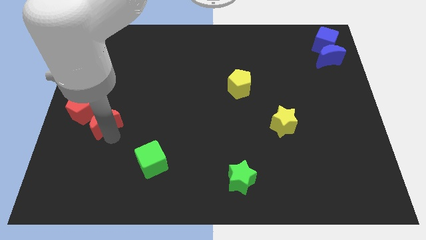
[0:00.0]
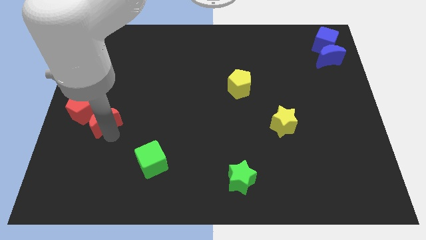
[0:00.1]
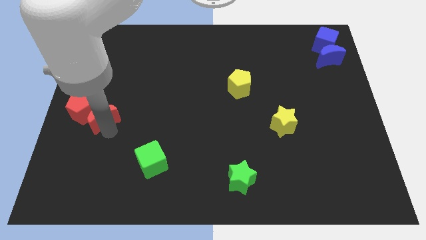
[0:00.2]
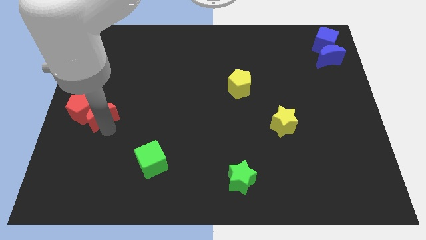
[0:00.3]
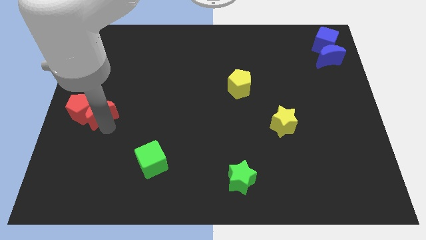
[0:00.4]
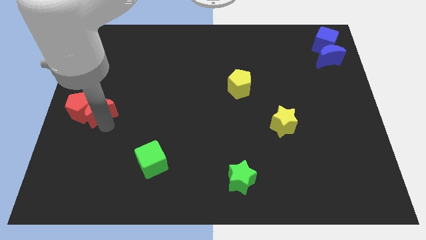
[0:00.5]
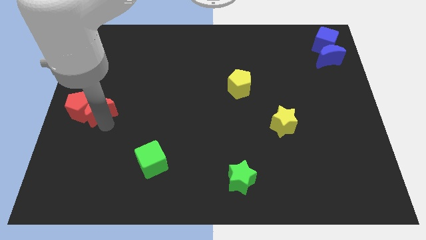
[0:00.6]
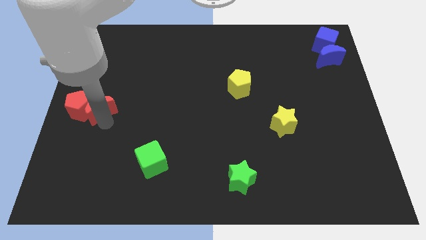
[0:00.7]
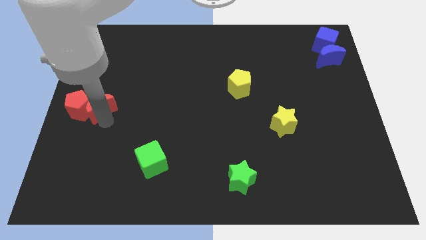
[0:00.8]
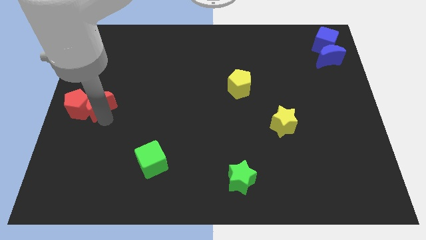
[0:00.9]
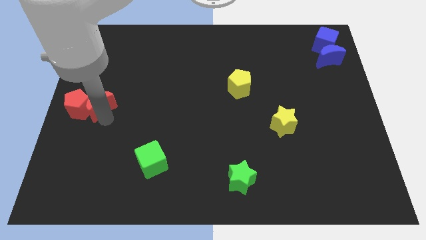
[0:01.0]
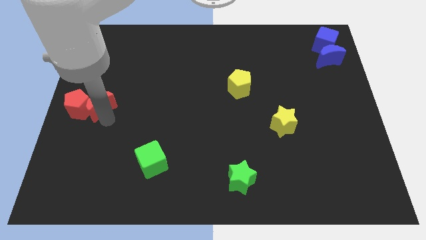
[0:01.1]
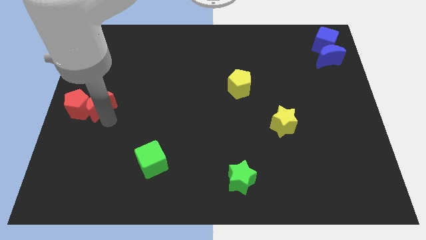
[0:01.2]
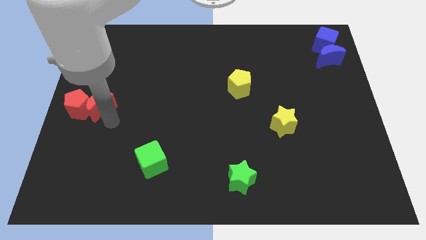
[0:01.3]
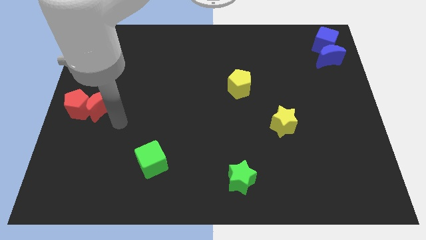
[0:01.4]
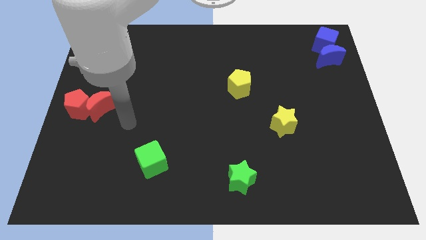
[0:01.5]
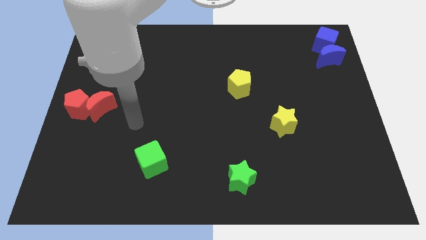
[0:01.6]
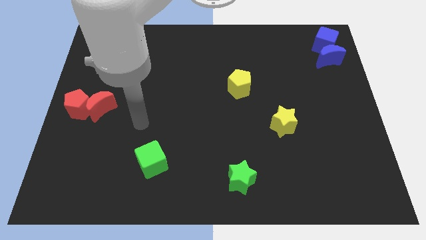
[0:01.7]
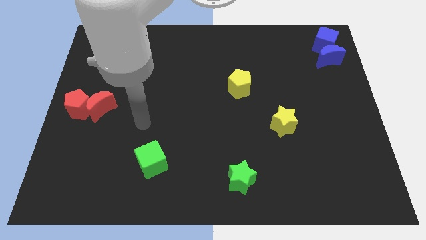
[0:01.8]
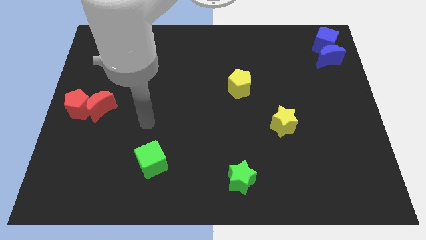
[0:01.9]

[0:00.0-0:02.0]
move the red moon into the red pentagon

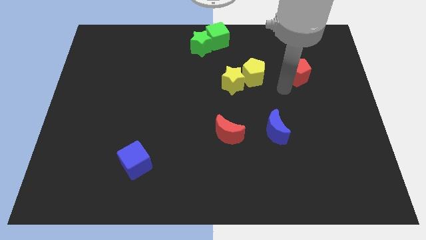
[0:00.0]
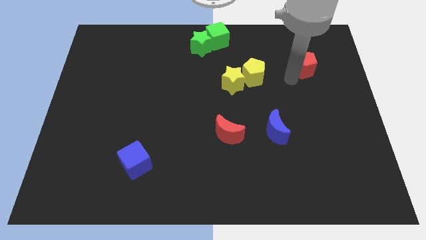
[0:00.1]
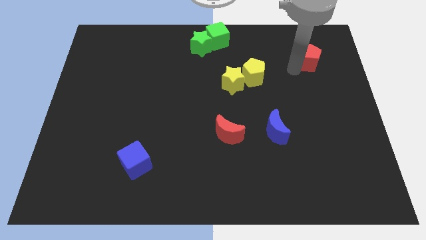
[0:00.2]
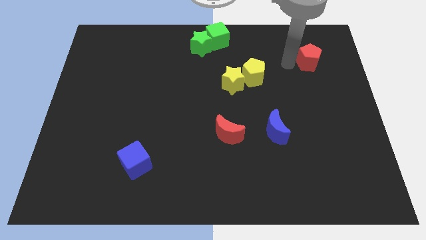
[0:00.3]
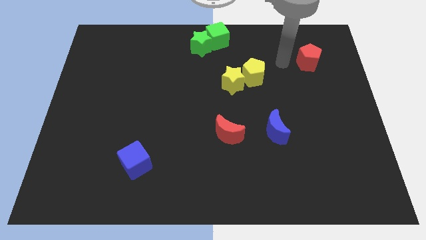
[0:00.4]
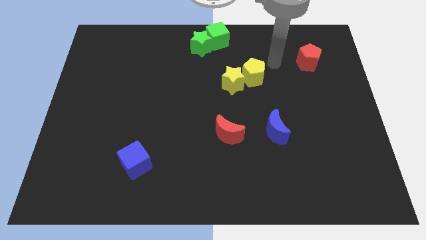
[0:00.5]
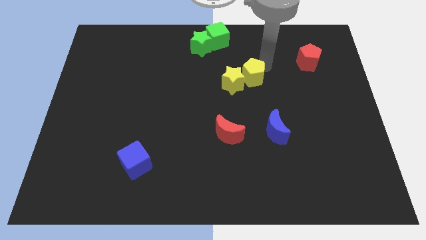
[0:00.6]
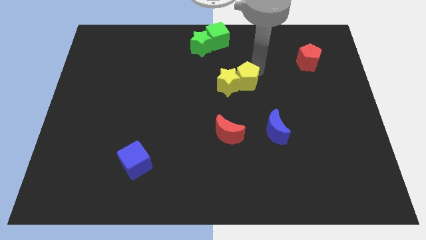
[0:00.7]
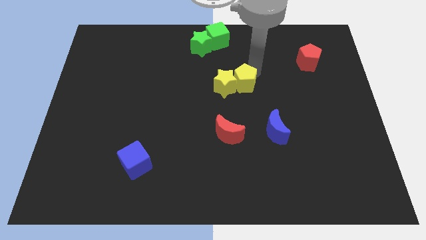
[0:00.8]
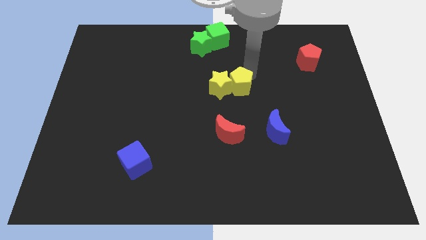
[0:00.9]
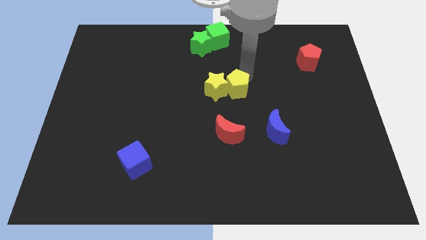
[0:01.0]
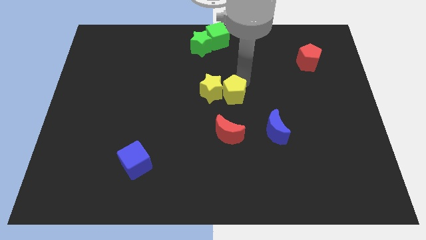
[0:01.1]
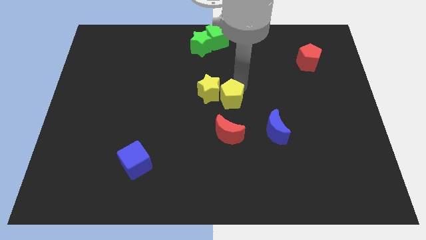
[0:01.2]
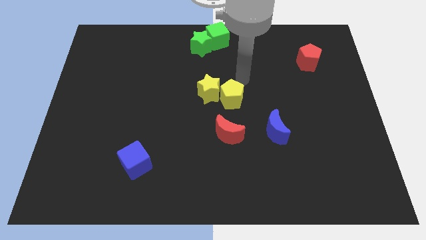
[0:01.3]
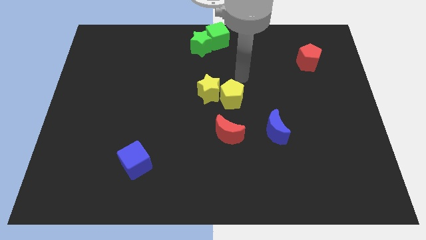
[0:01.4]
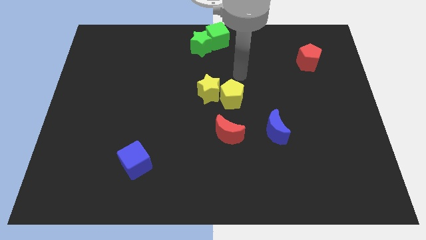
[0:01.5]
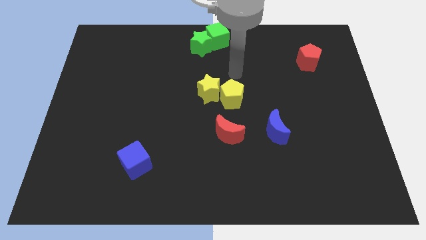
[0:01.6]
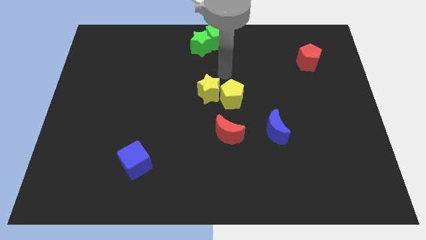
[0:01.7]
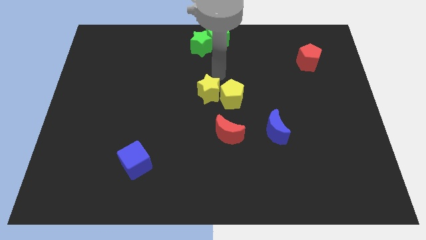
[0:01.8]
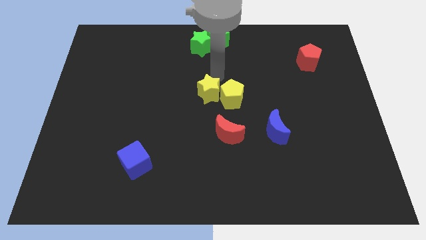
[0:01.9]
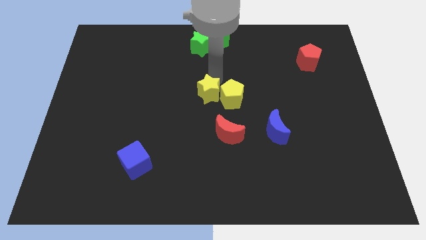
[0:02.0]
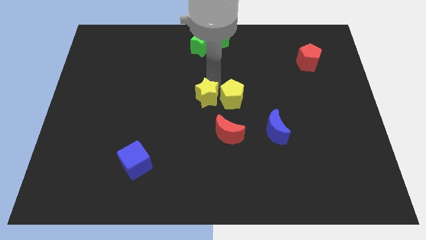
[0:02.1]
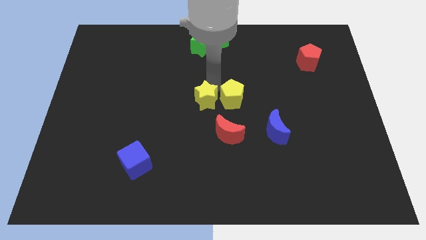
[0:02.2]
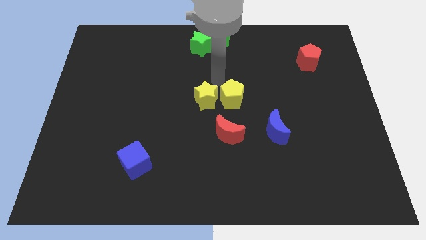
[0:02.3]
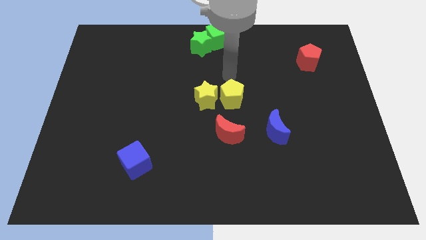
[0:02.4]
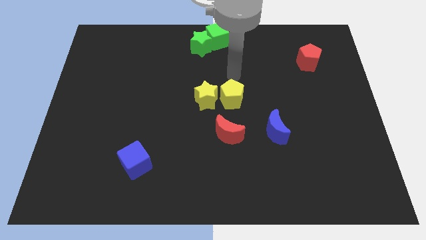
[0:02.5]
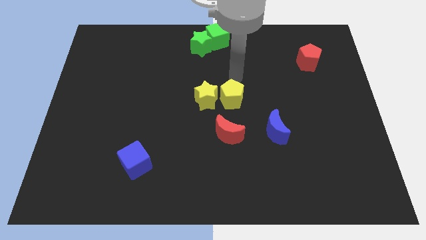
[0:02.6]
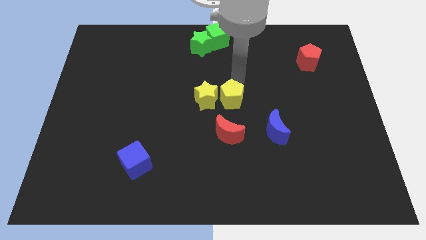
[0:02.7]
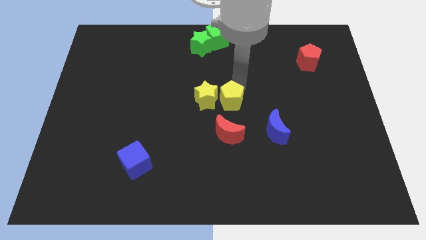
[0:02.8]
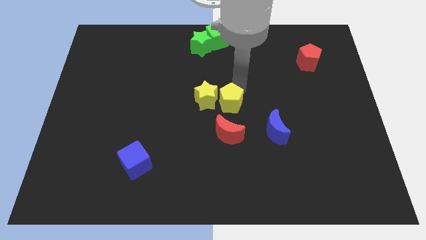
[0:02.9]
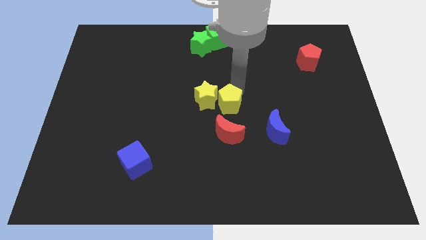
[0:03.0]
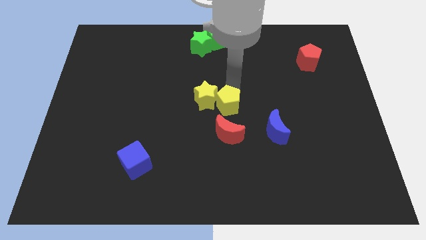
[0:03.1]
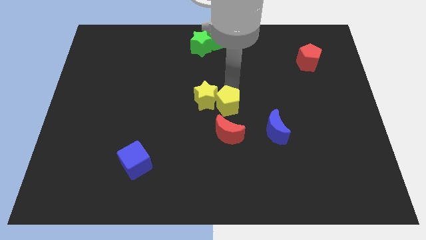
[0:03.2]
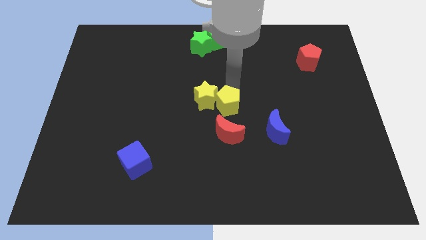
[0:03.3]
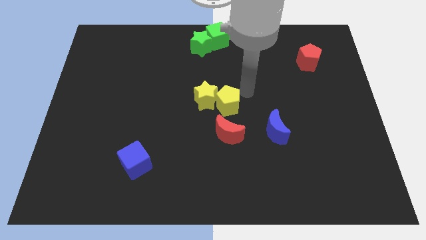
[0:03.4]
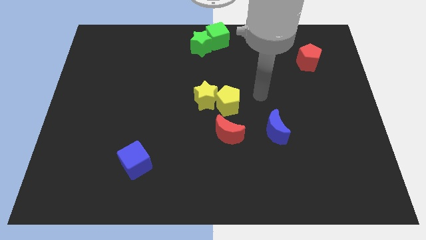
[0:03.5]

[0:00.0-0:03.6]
push the yellow blocks to the center of the board

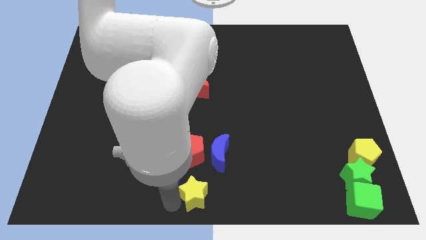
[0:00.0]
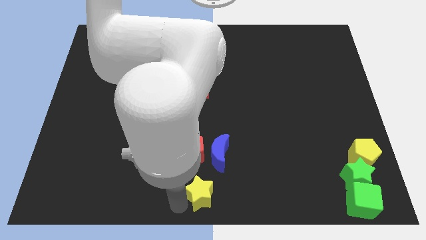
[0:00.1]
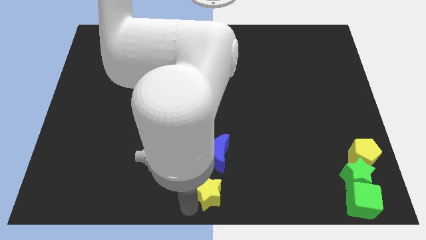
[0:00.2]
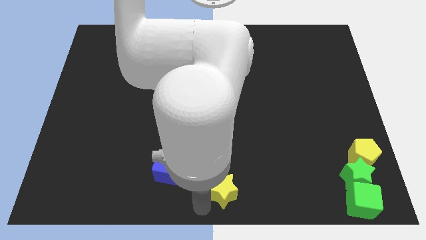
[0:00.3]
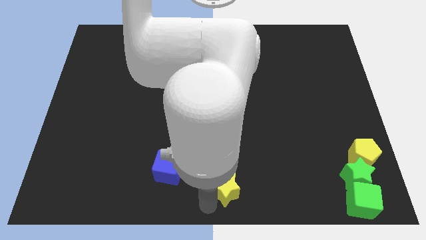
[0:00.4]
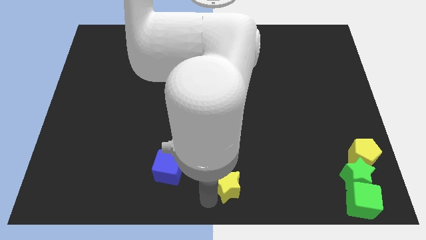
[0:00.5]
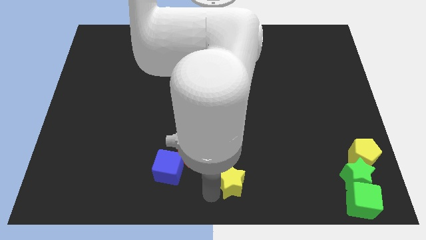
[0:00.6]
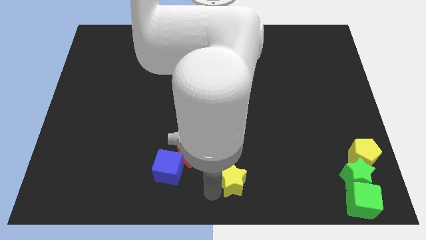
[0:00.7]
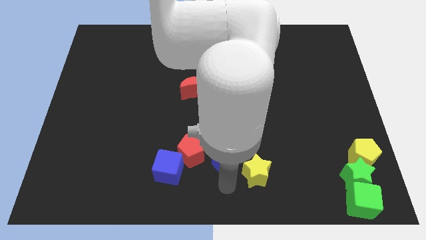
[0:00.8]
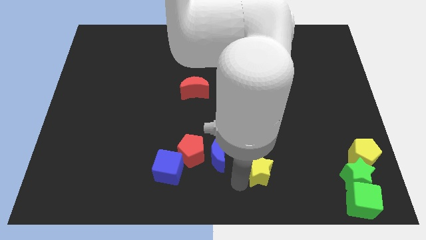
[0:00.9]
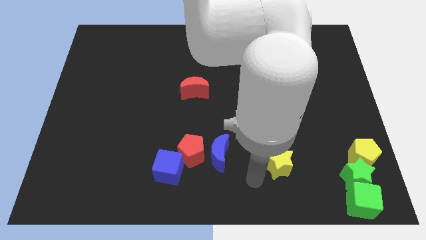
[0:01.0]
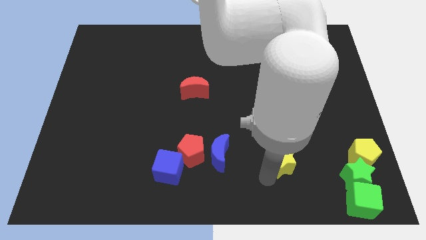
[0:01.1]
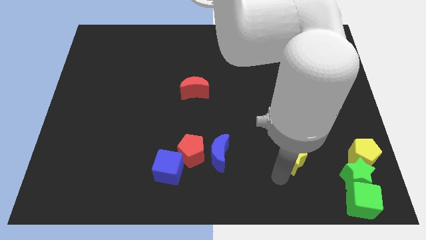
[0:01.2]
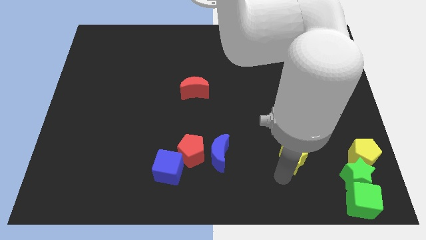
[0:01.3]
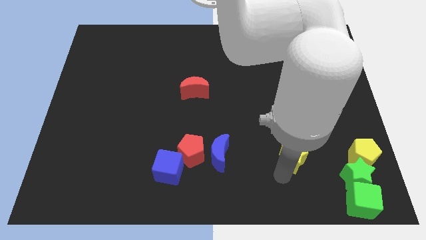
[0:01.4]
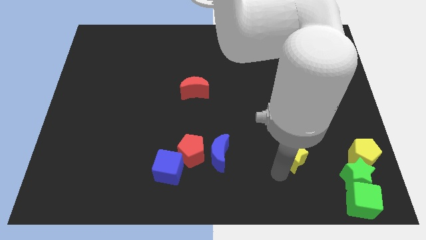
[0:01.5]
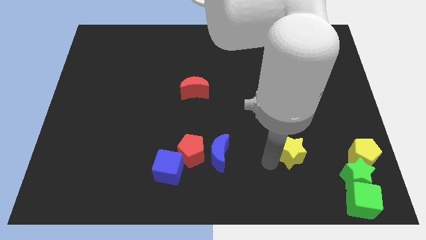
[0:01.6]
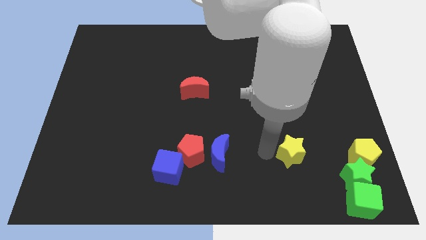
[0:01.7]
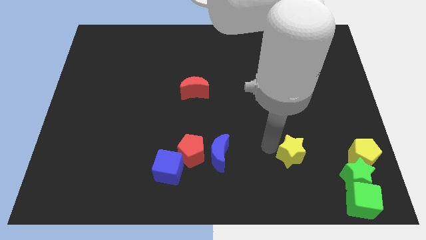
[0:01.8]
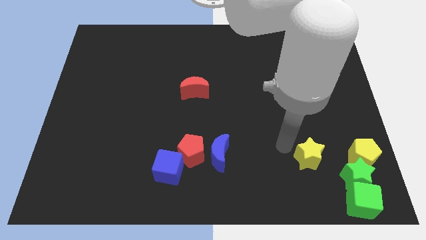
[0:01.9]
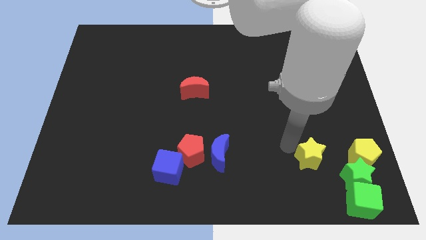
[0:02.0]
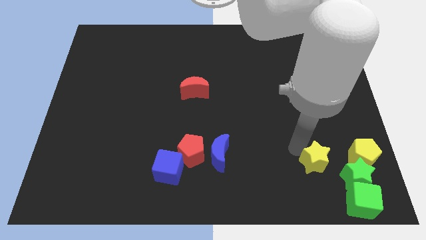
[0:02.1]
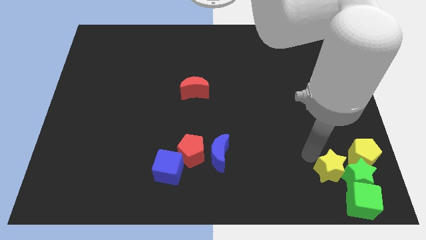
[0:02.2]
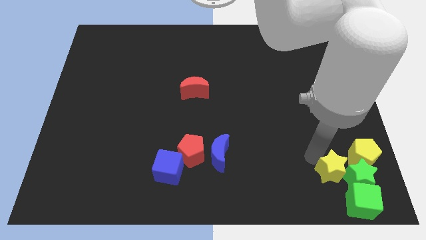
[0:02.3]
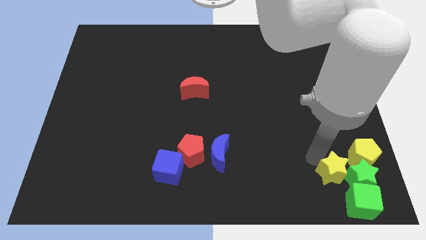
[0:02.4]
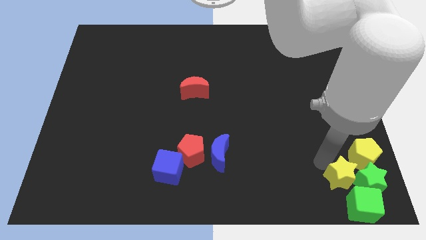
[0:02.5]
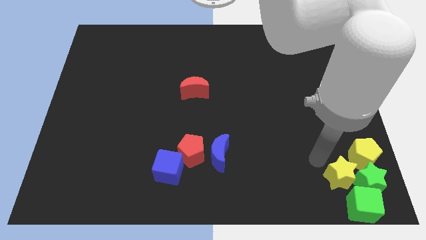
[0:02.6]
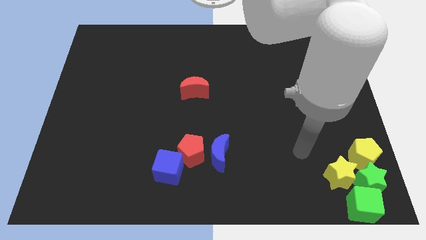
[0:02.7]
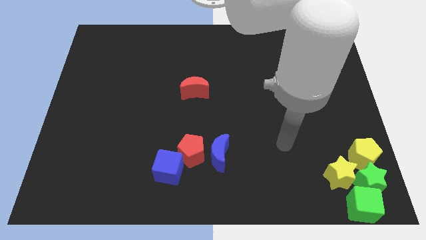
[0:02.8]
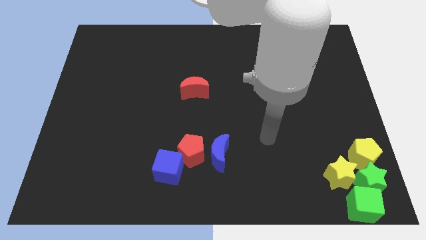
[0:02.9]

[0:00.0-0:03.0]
place the yellow star left to the green star

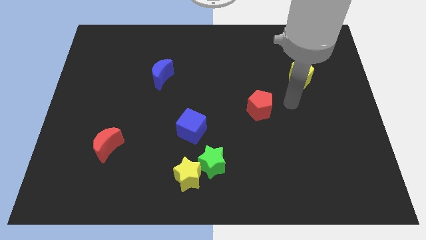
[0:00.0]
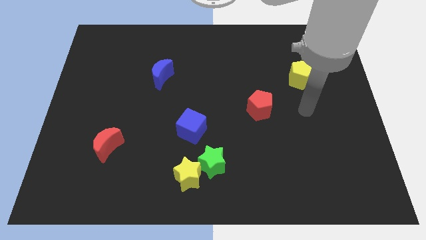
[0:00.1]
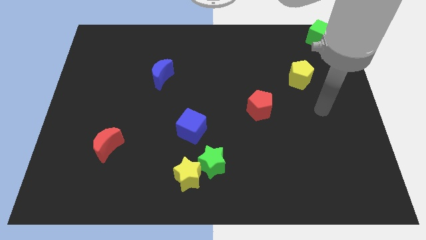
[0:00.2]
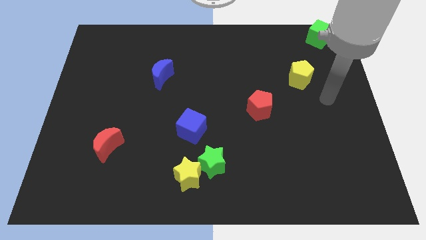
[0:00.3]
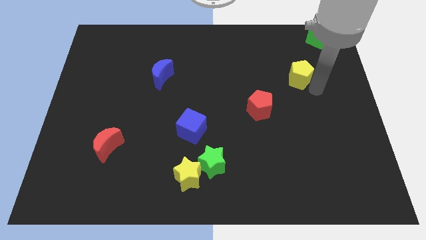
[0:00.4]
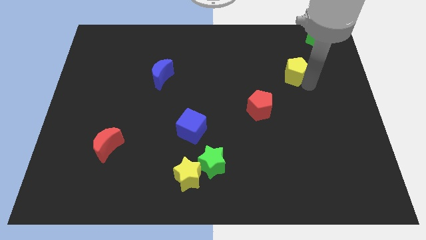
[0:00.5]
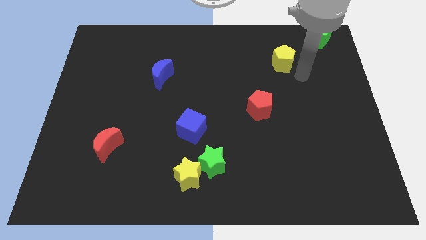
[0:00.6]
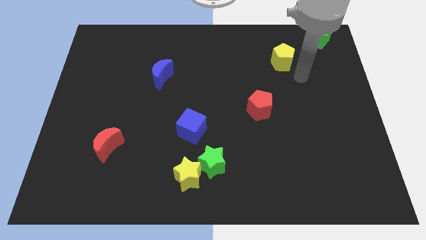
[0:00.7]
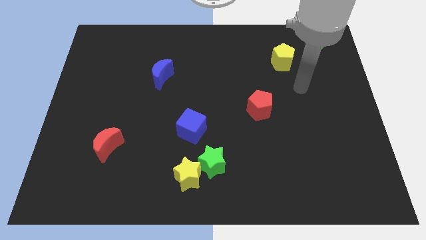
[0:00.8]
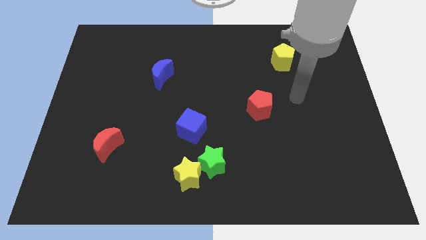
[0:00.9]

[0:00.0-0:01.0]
push yellow pentagon diagonally to the red pentagon
